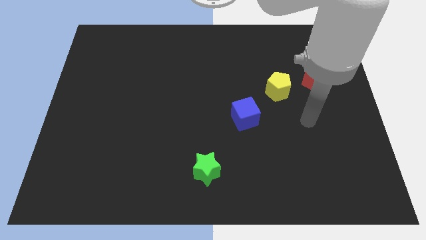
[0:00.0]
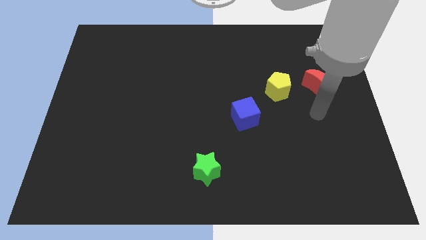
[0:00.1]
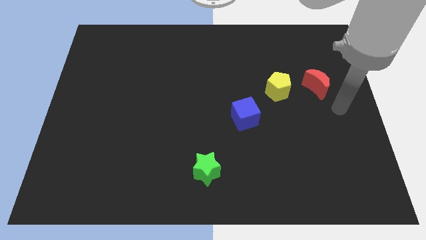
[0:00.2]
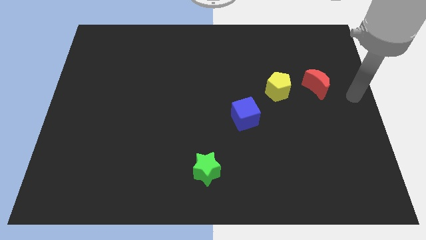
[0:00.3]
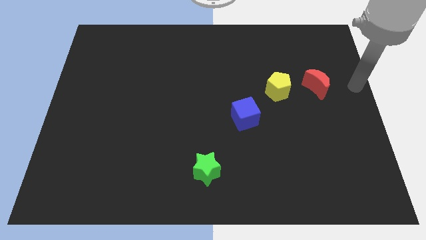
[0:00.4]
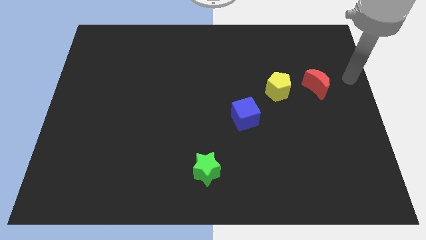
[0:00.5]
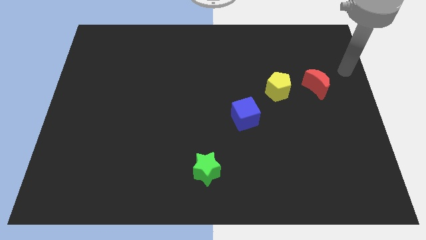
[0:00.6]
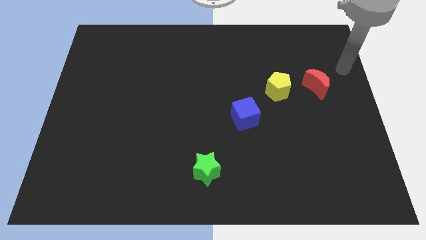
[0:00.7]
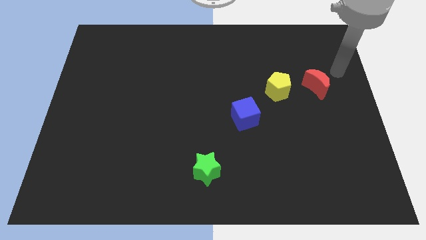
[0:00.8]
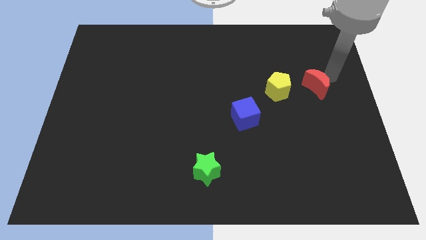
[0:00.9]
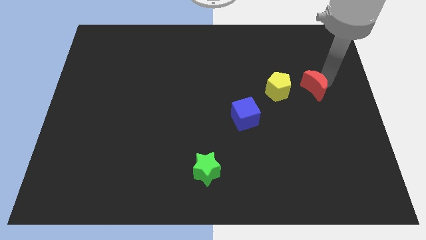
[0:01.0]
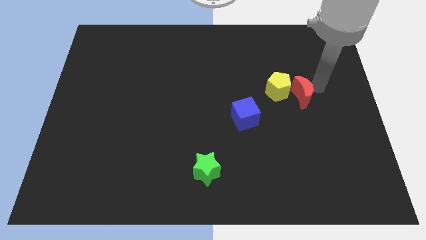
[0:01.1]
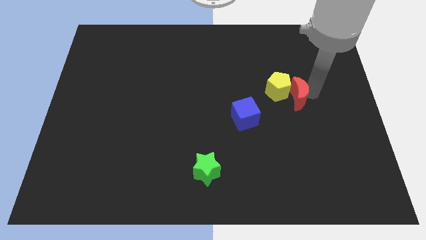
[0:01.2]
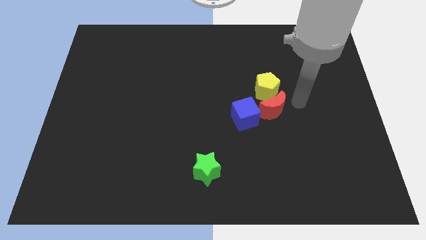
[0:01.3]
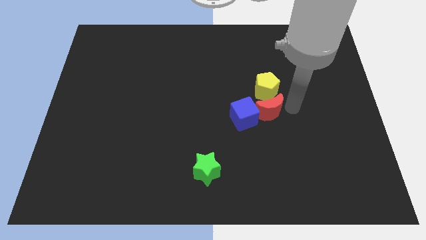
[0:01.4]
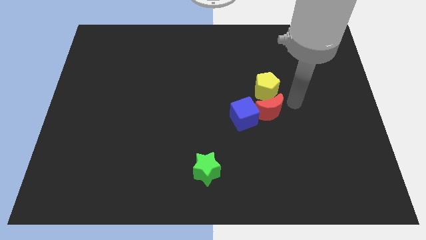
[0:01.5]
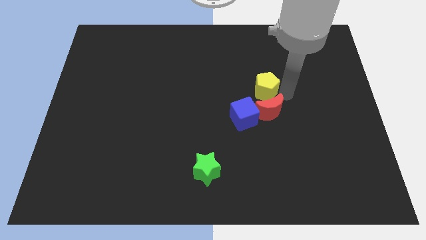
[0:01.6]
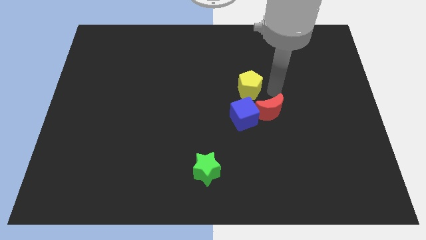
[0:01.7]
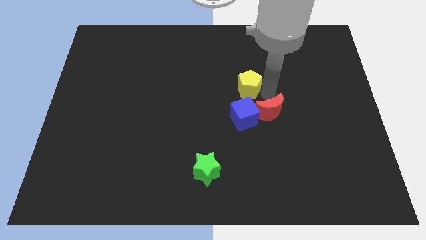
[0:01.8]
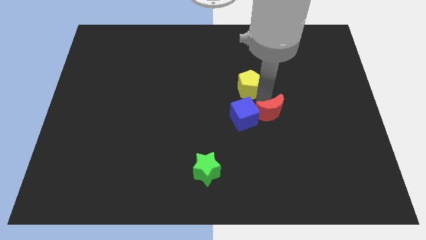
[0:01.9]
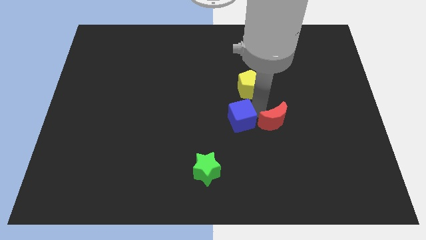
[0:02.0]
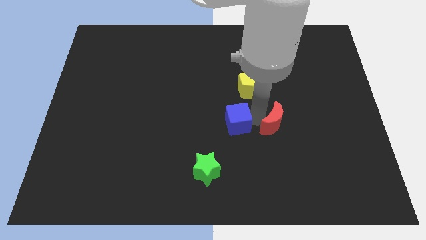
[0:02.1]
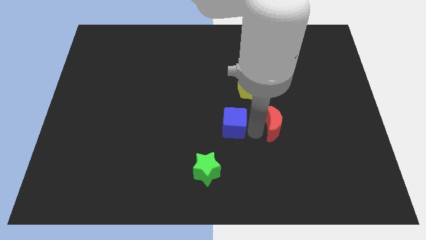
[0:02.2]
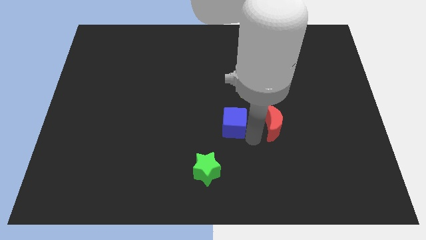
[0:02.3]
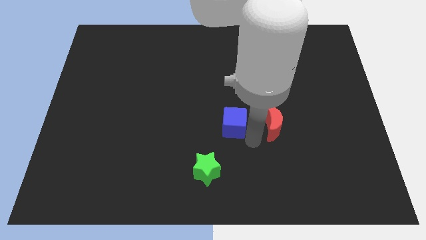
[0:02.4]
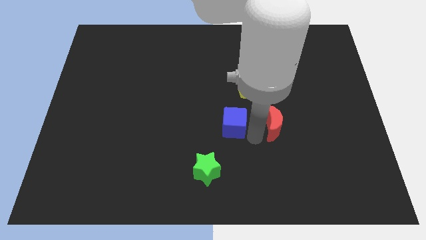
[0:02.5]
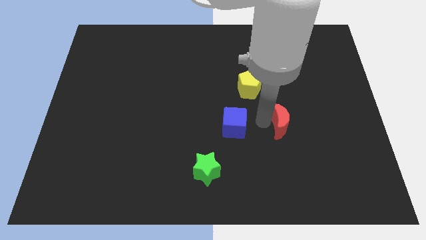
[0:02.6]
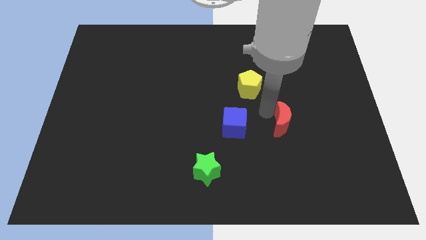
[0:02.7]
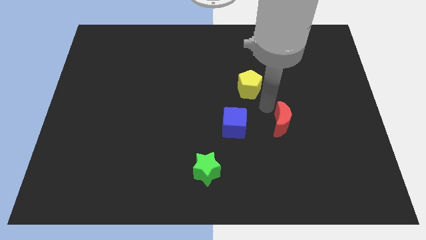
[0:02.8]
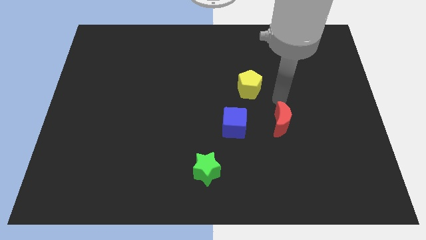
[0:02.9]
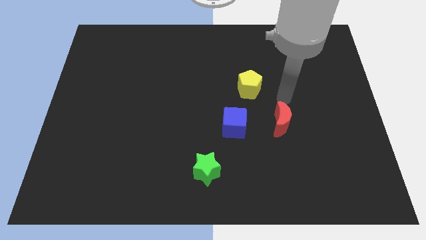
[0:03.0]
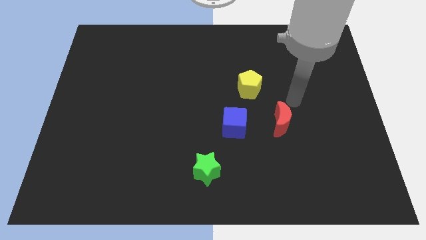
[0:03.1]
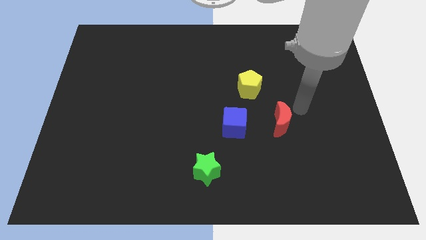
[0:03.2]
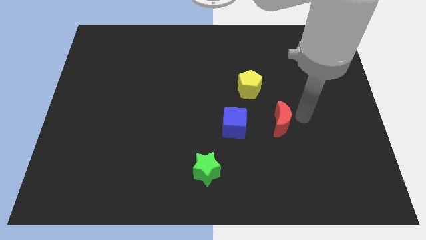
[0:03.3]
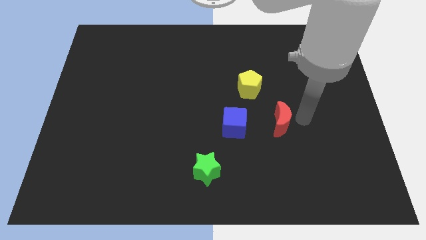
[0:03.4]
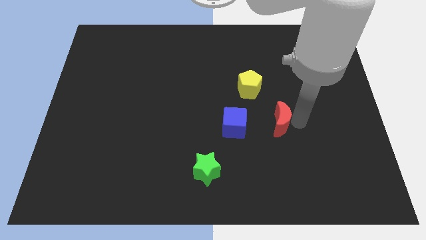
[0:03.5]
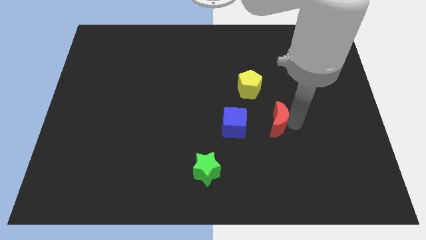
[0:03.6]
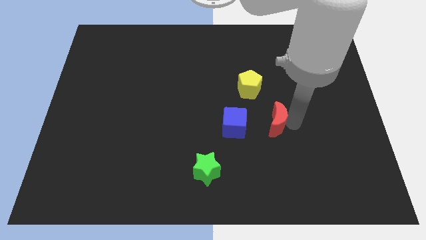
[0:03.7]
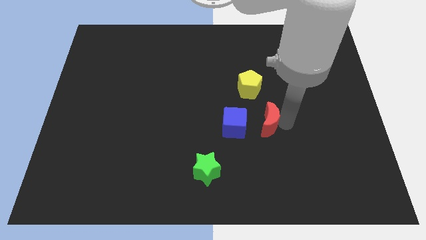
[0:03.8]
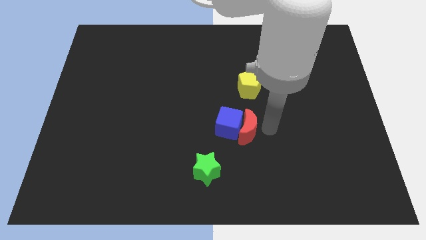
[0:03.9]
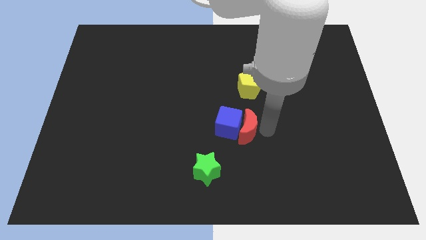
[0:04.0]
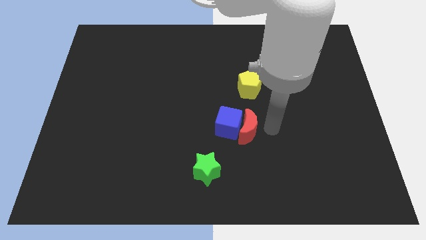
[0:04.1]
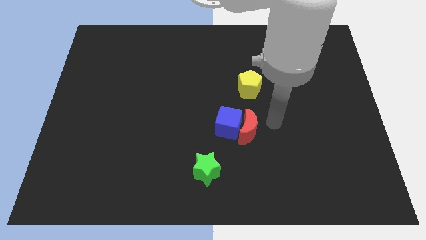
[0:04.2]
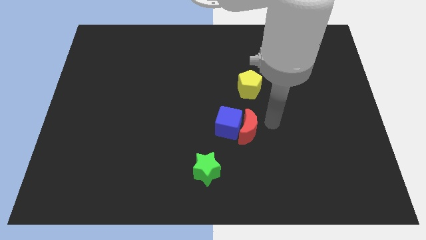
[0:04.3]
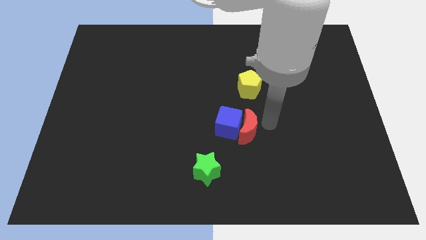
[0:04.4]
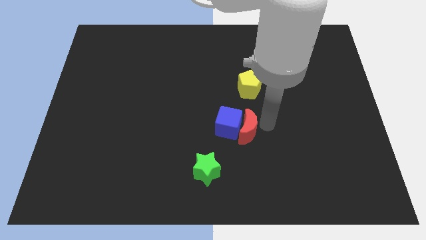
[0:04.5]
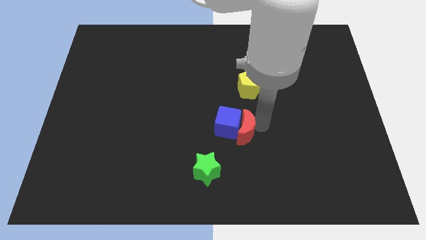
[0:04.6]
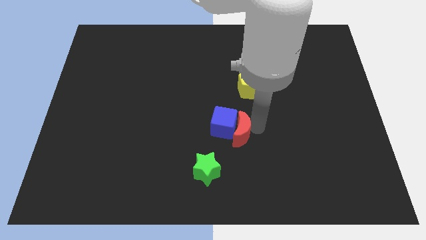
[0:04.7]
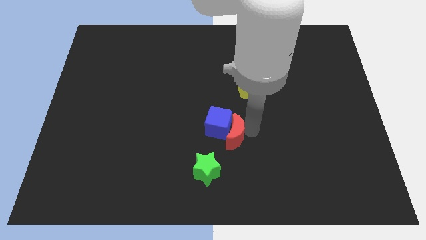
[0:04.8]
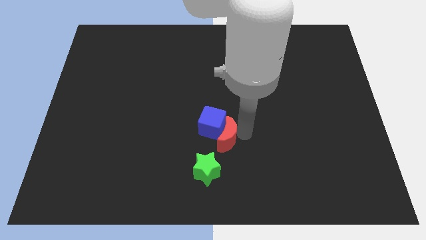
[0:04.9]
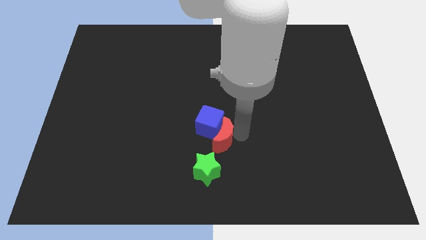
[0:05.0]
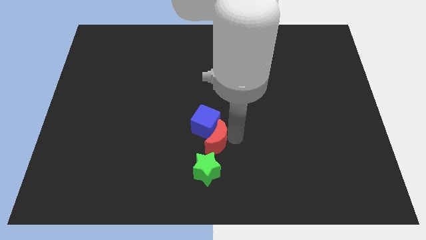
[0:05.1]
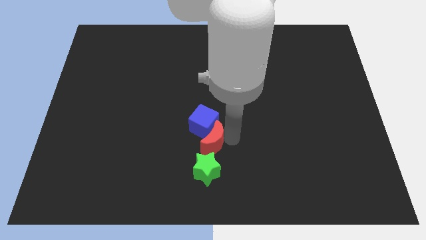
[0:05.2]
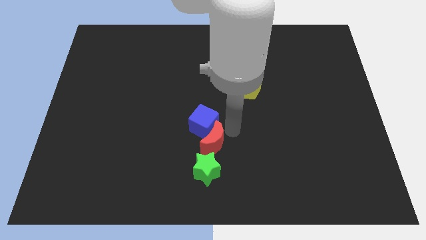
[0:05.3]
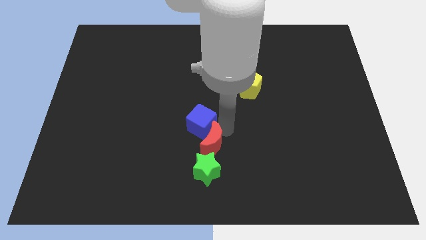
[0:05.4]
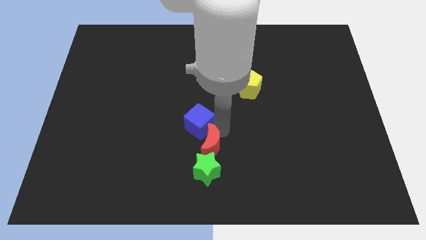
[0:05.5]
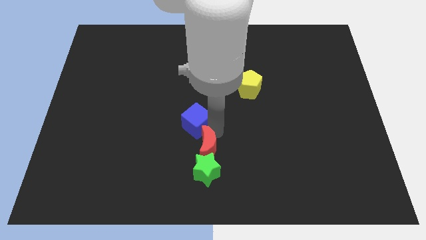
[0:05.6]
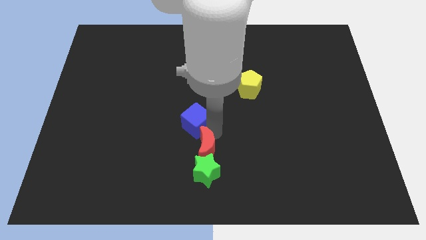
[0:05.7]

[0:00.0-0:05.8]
move the red moon next to the green star

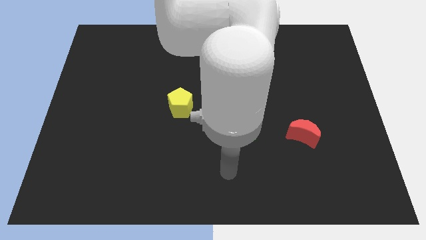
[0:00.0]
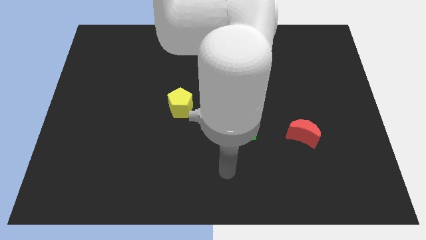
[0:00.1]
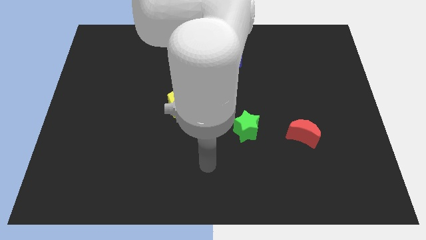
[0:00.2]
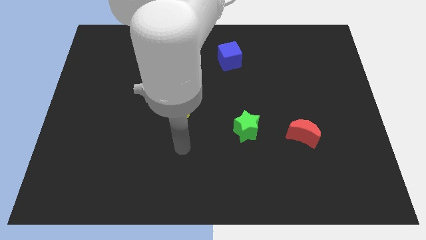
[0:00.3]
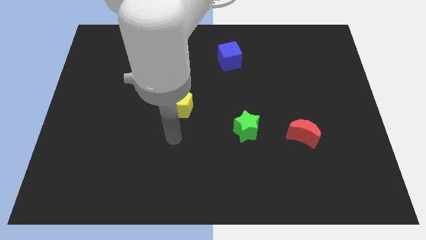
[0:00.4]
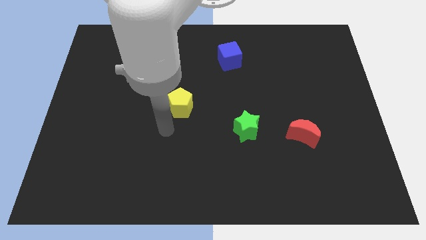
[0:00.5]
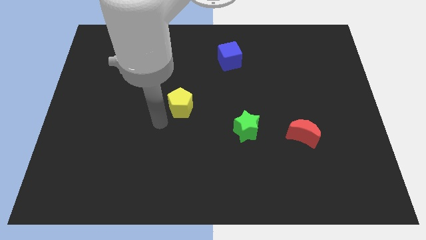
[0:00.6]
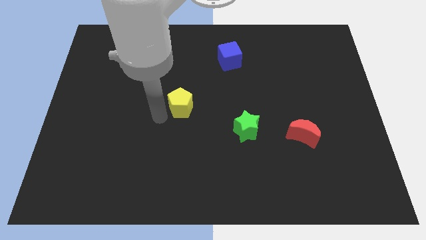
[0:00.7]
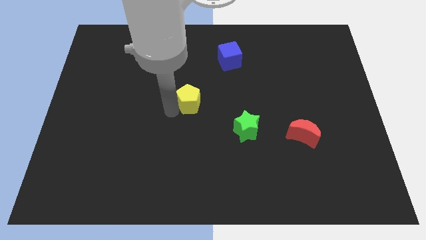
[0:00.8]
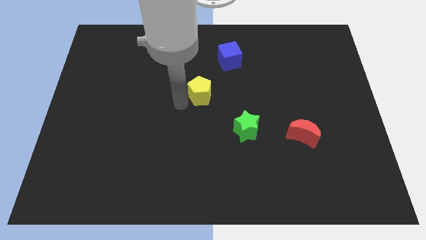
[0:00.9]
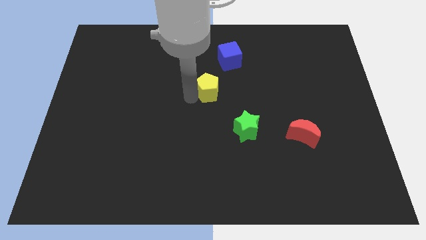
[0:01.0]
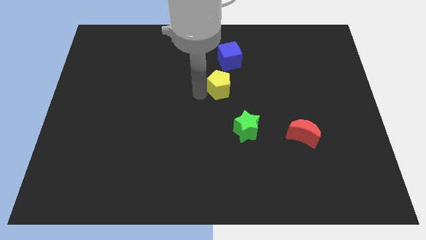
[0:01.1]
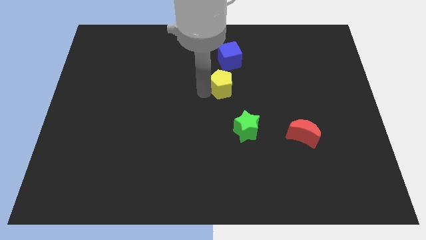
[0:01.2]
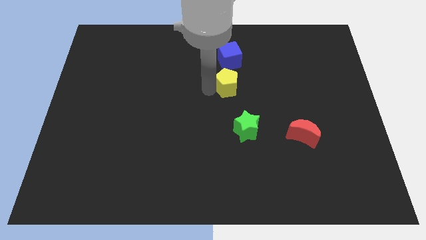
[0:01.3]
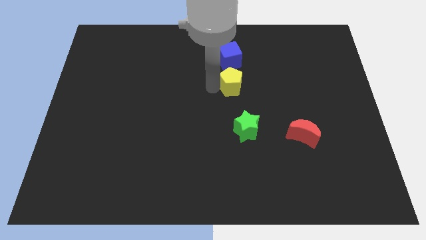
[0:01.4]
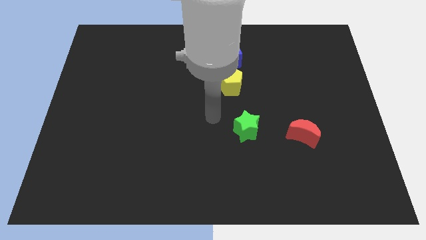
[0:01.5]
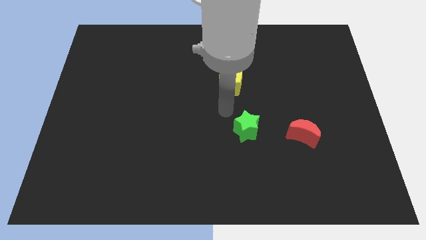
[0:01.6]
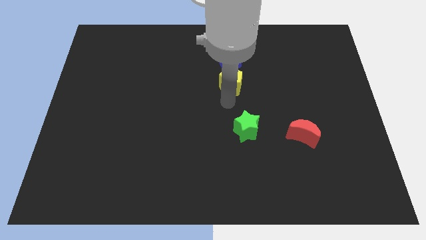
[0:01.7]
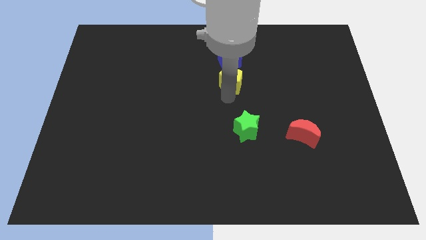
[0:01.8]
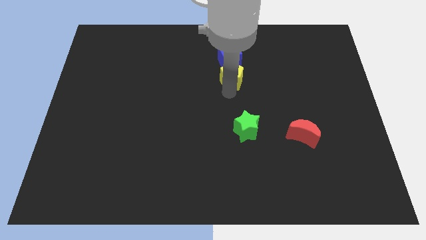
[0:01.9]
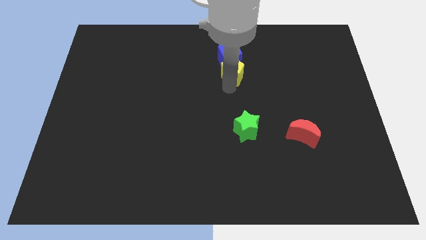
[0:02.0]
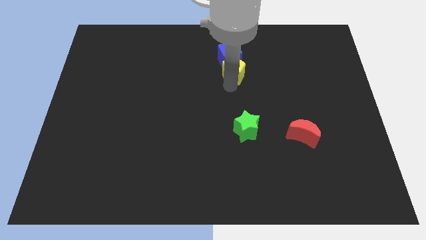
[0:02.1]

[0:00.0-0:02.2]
put the yellow block close to the blue block

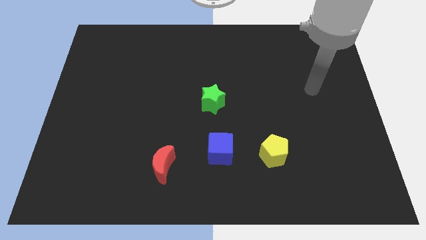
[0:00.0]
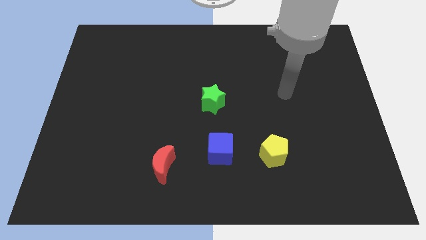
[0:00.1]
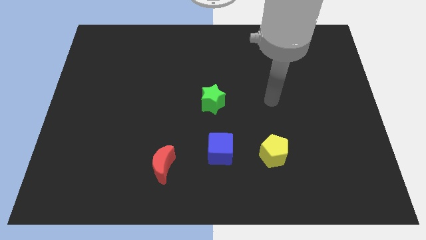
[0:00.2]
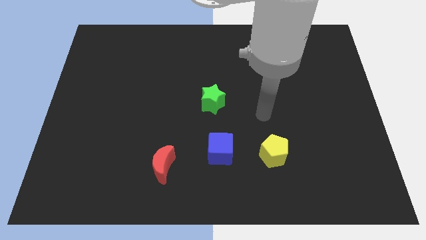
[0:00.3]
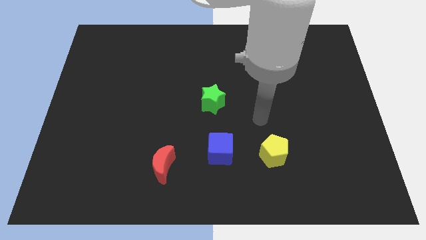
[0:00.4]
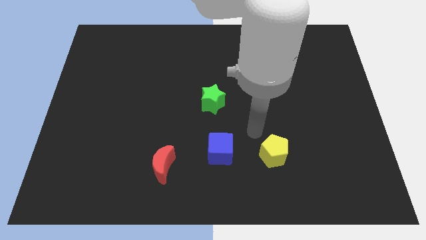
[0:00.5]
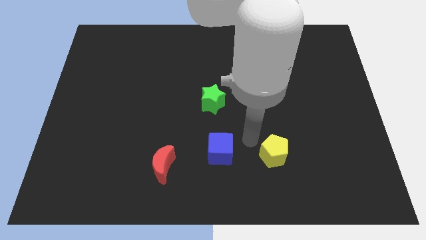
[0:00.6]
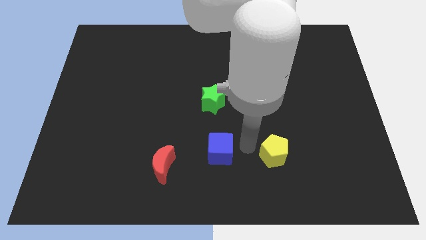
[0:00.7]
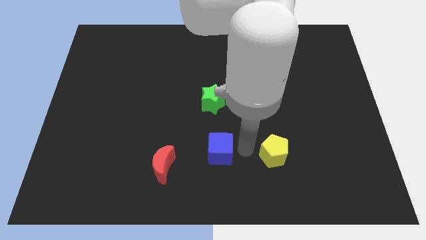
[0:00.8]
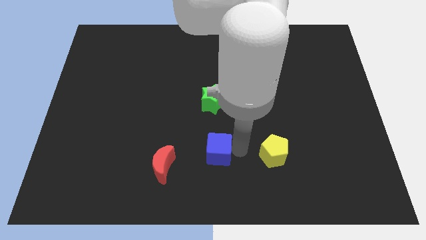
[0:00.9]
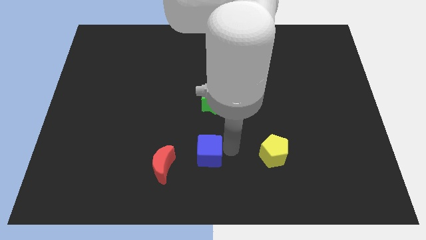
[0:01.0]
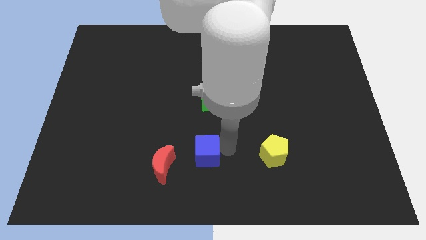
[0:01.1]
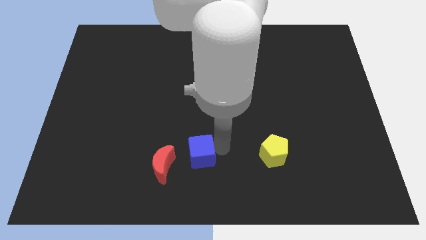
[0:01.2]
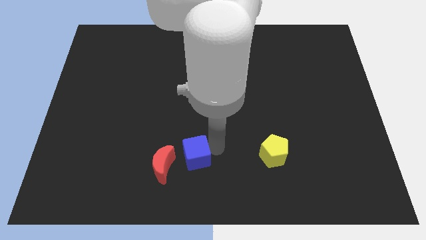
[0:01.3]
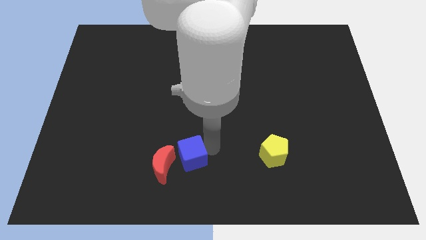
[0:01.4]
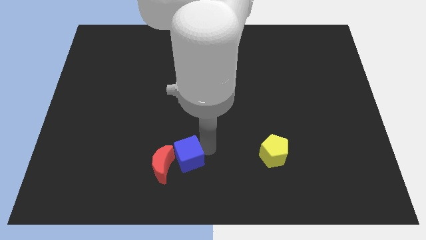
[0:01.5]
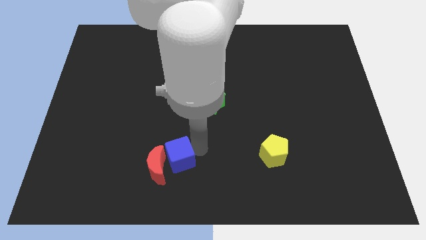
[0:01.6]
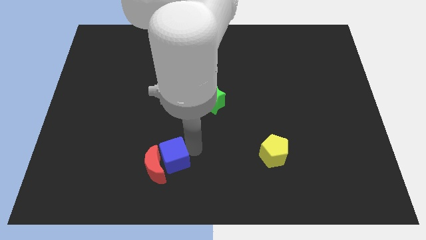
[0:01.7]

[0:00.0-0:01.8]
move the blue cube close to the red block
